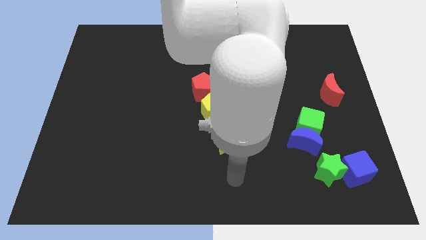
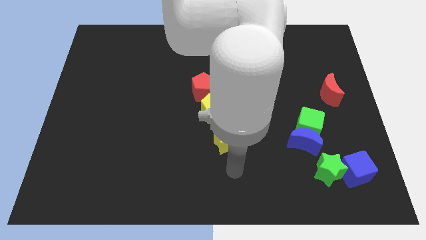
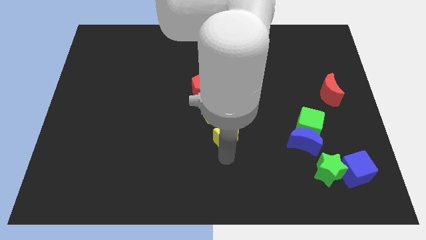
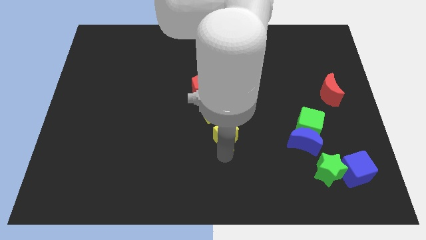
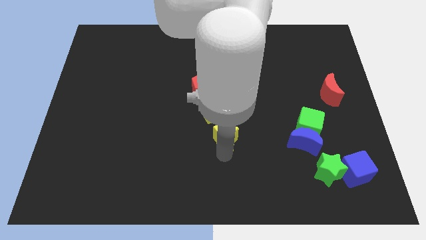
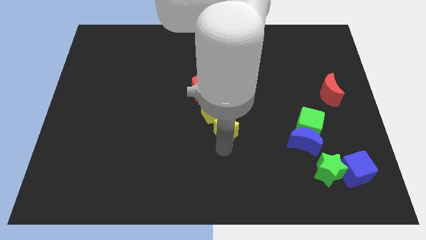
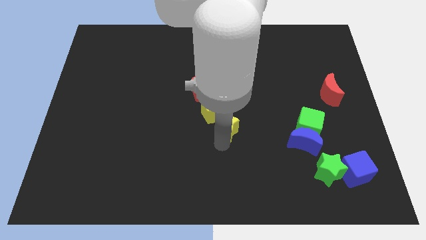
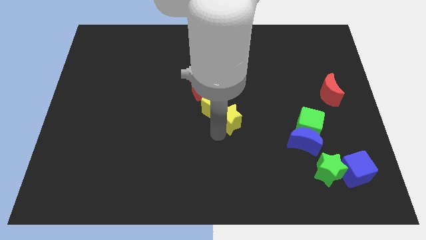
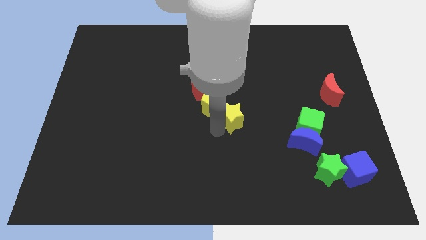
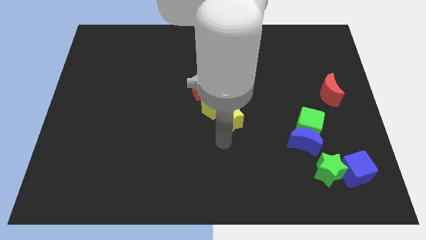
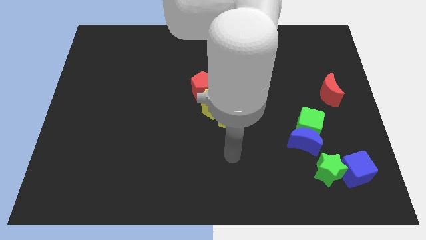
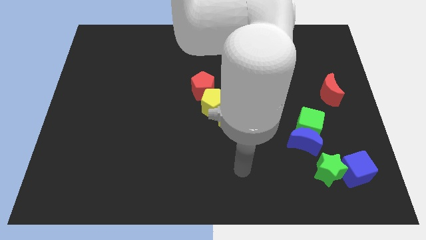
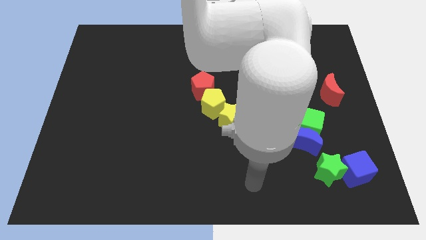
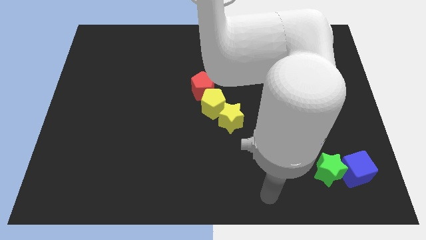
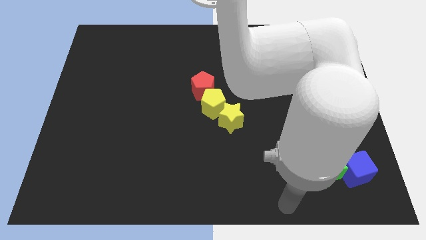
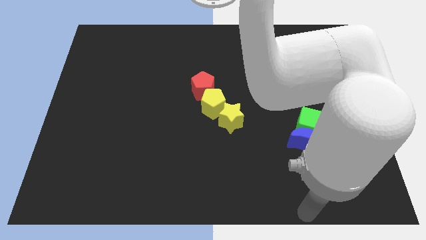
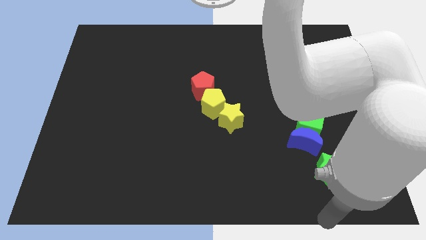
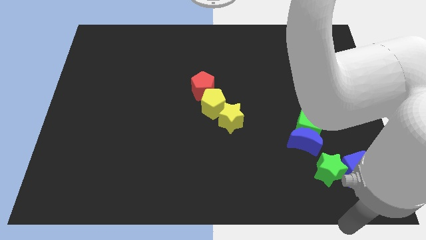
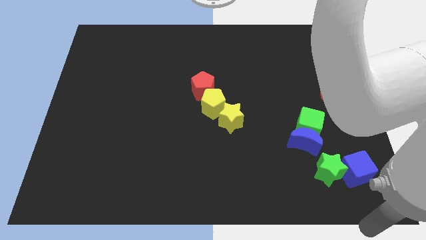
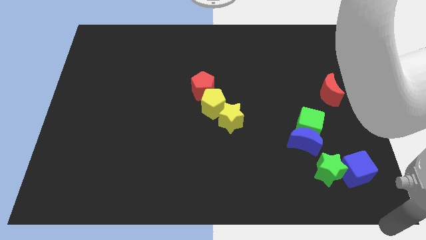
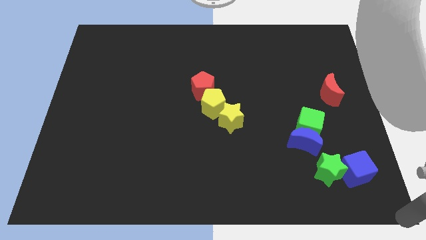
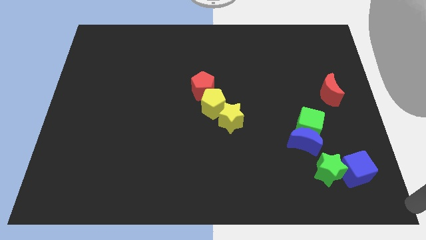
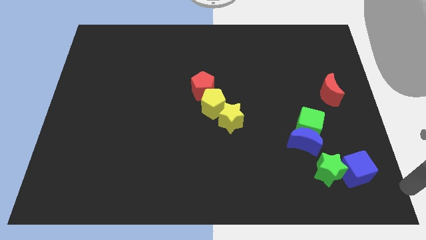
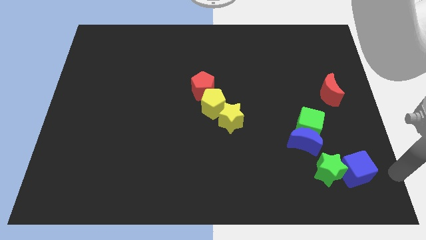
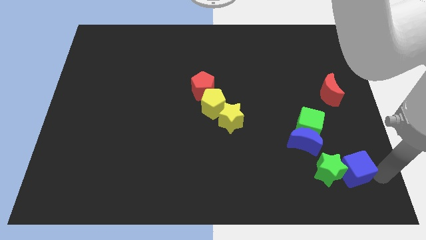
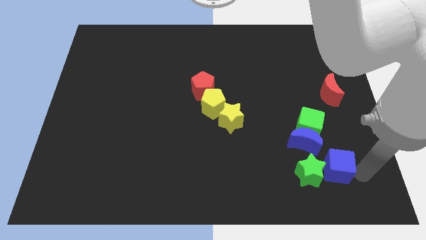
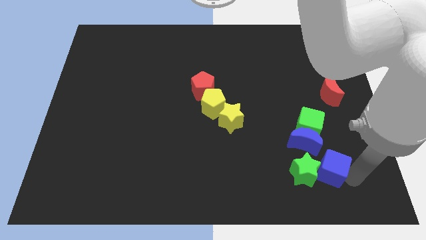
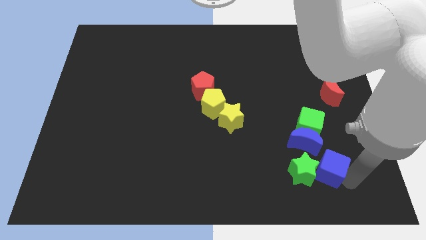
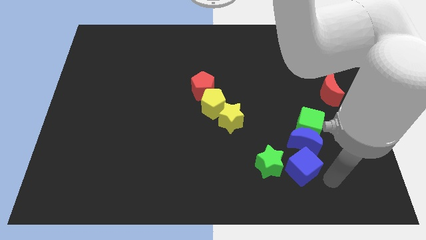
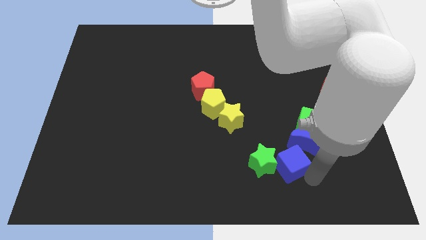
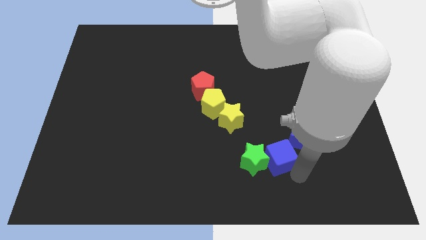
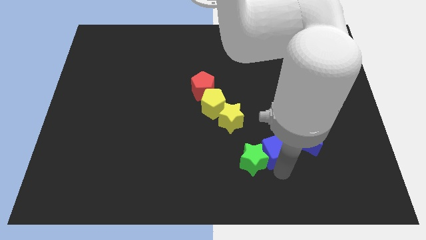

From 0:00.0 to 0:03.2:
move the green star and blue cube towards left side

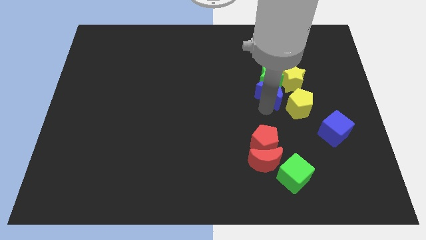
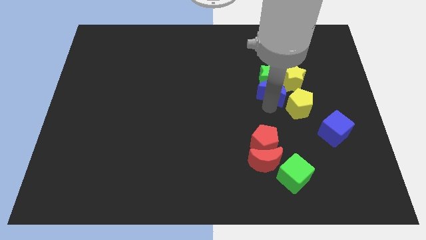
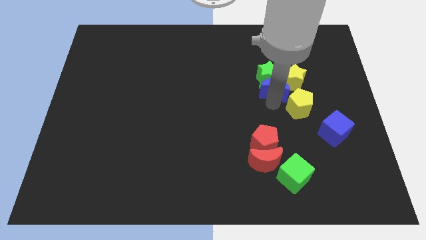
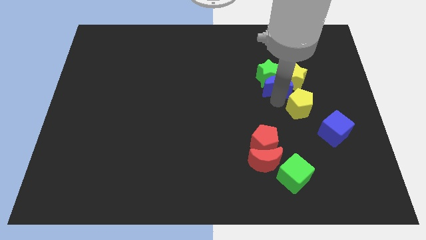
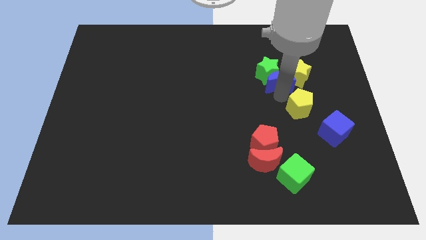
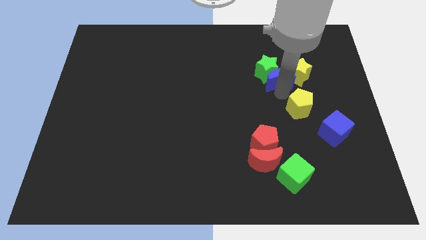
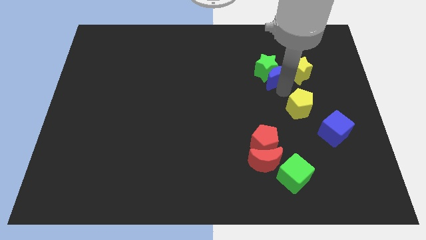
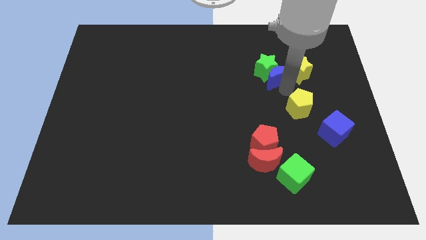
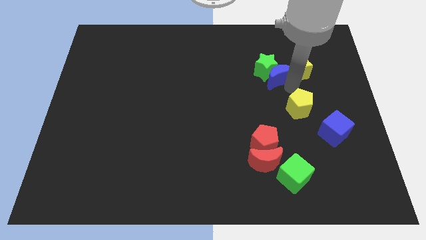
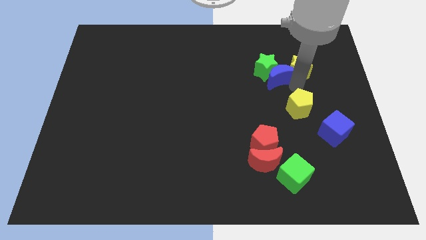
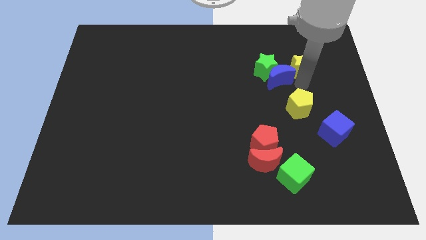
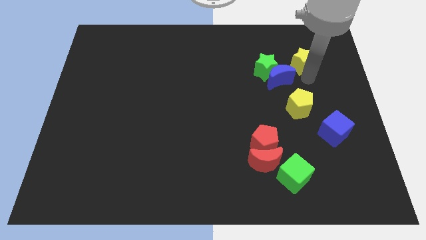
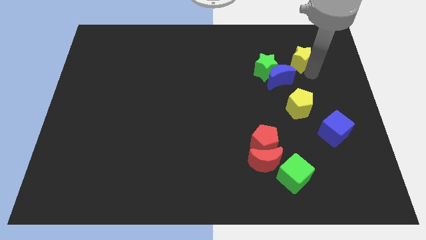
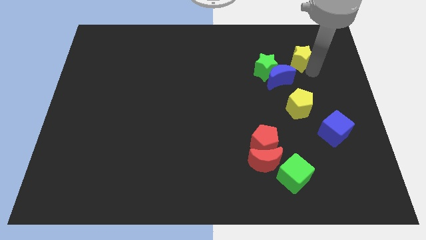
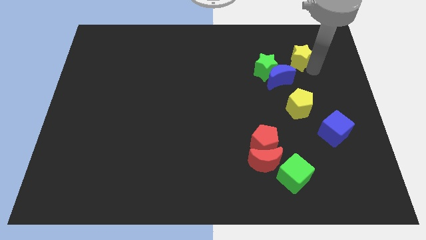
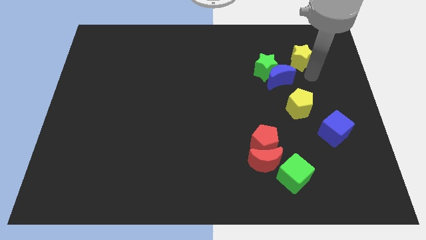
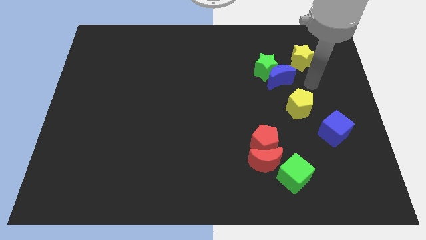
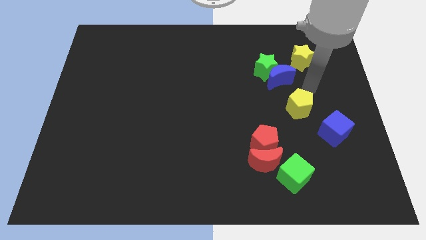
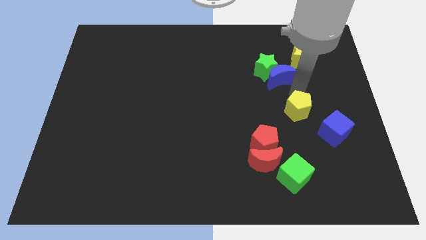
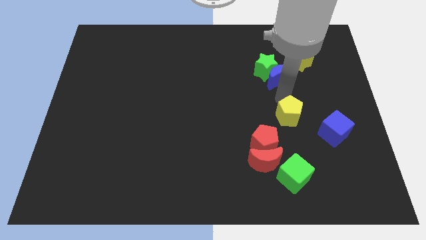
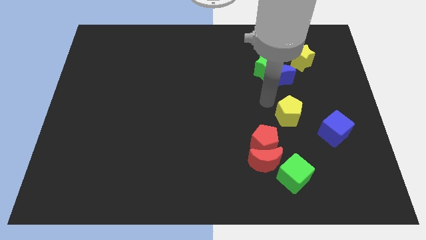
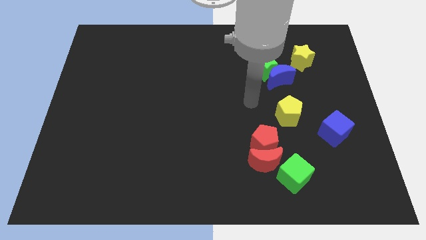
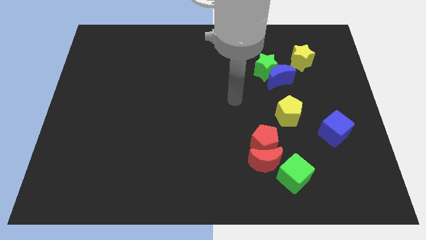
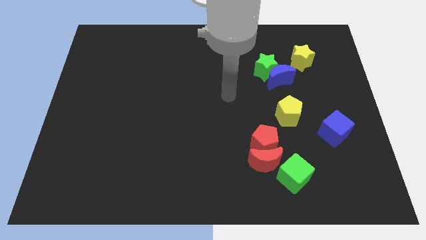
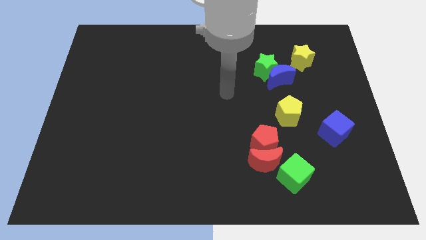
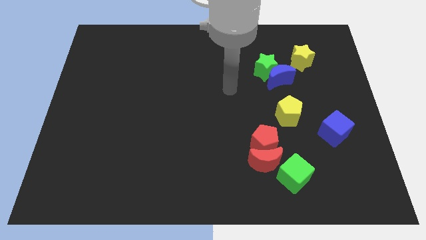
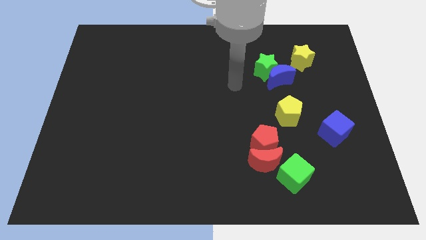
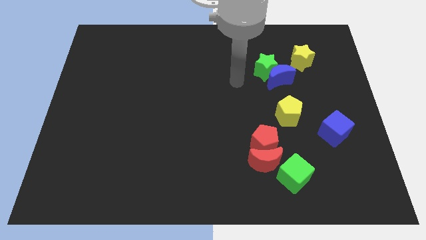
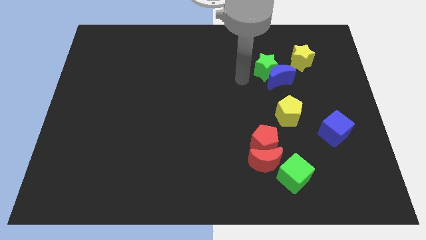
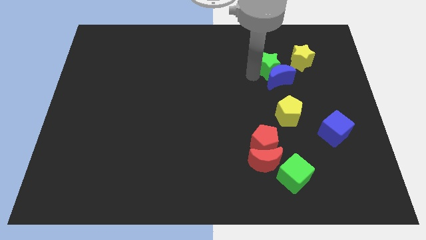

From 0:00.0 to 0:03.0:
place the arm left to the green star

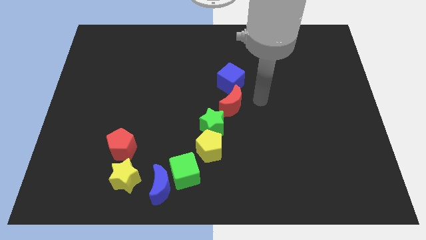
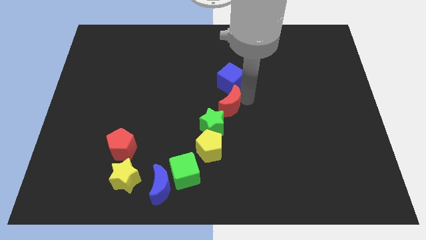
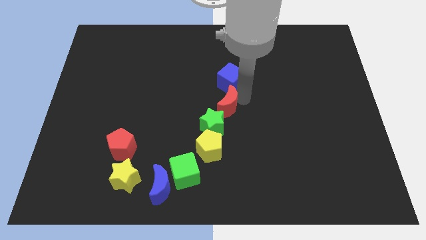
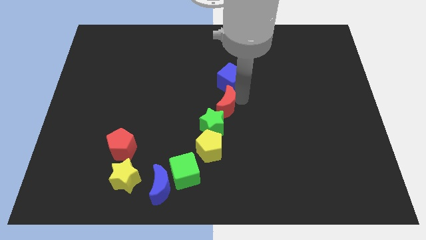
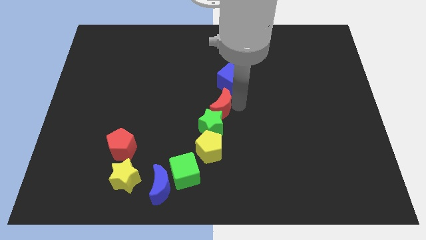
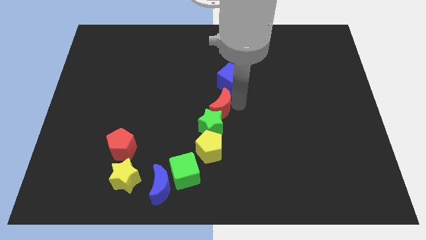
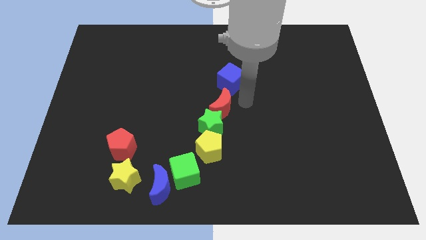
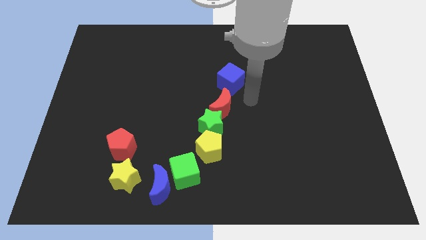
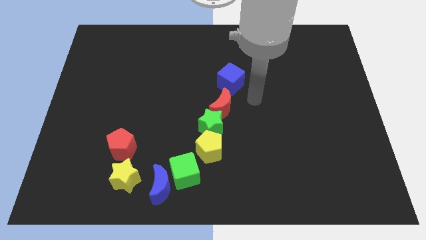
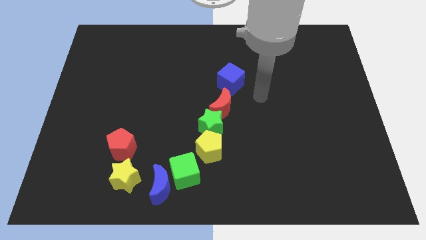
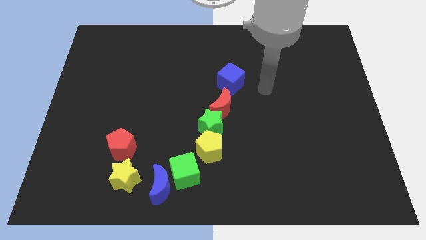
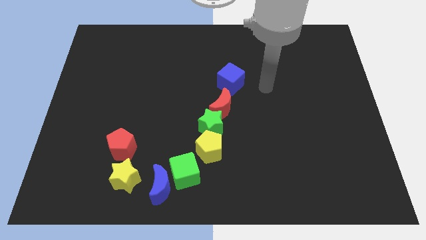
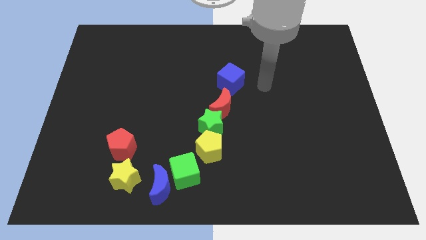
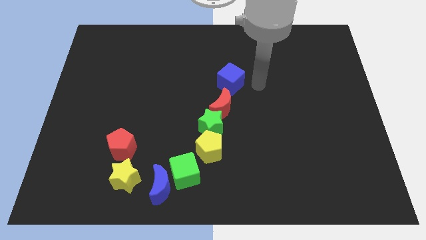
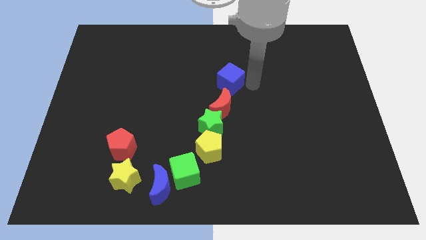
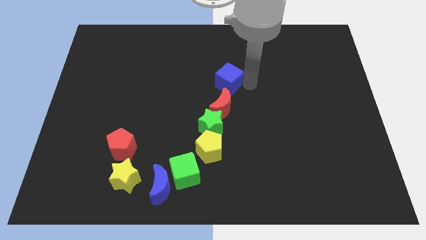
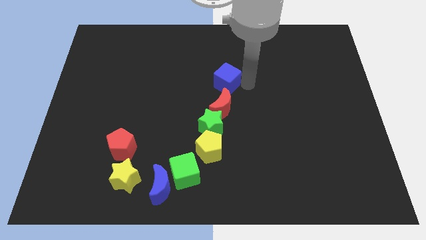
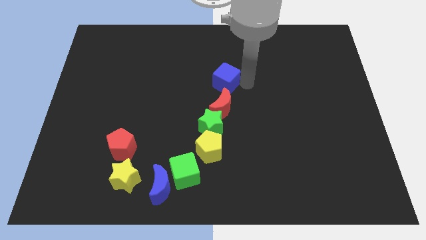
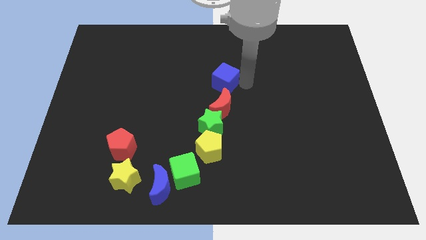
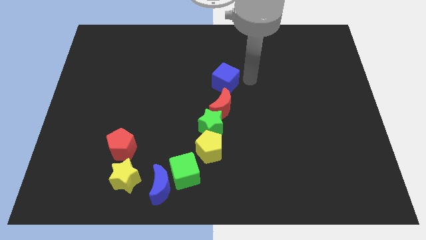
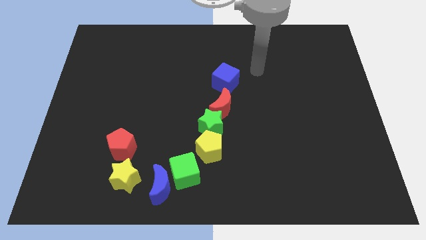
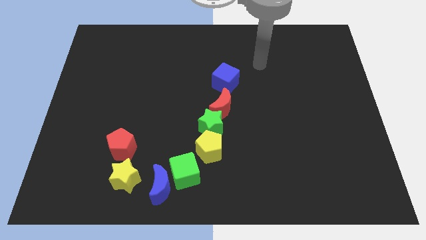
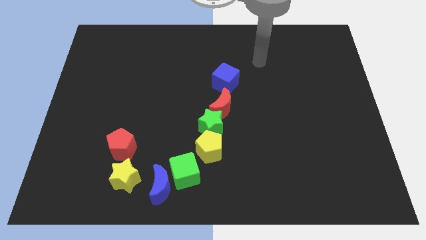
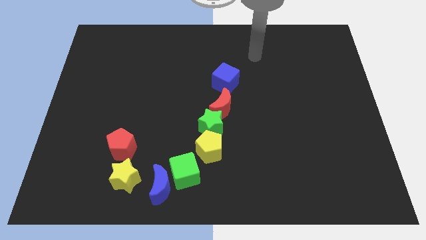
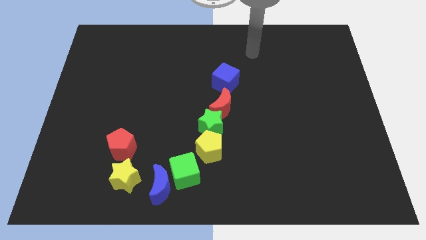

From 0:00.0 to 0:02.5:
push the red moon into the green star
